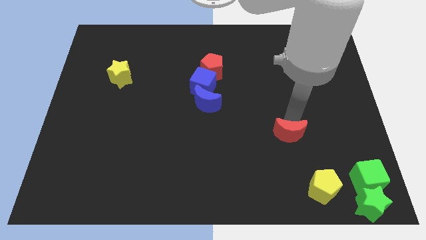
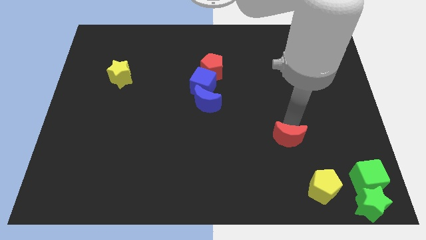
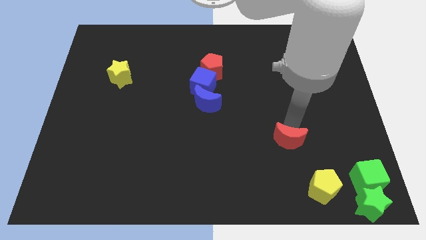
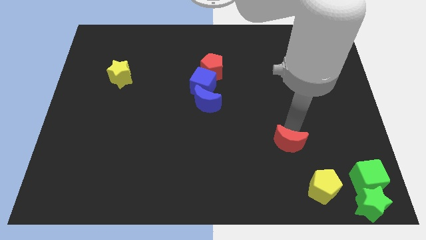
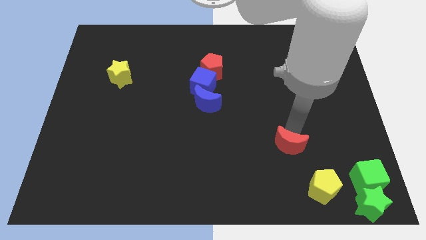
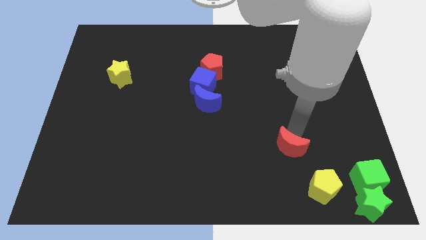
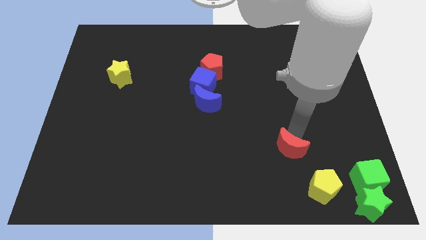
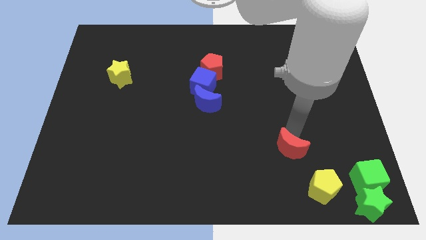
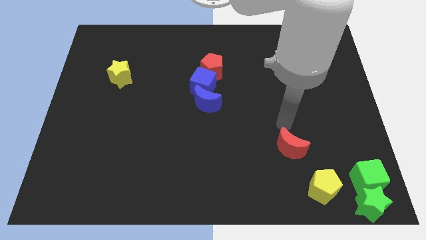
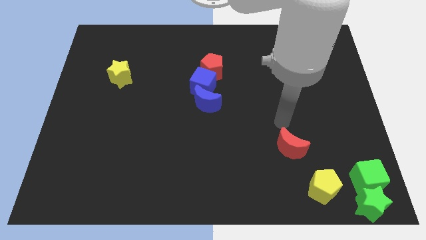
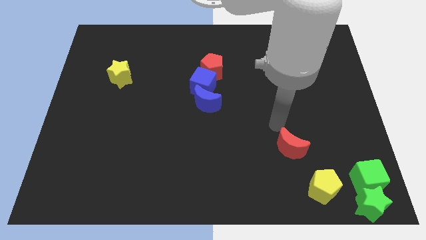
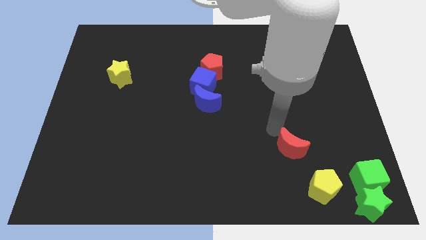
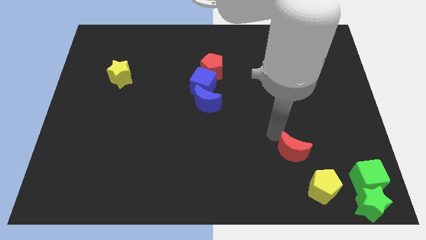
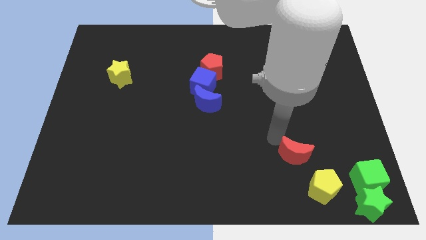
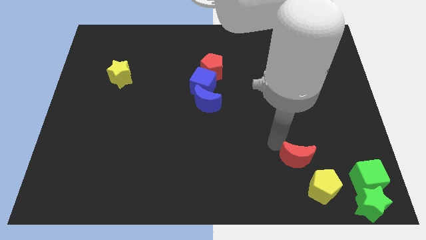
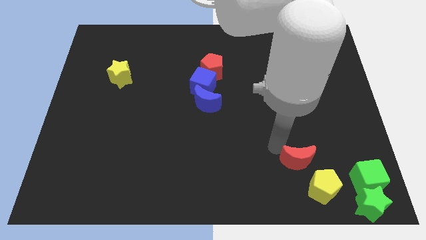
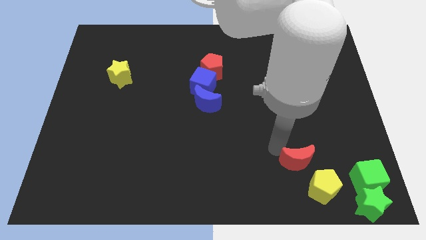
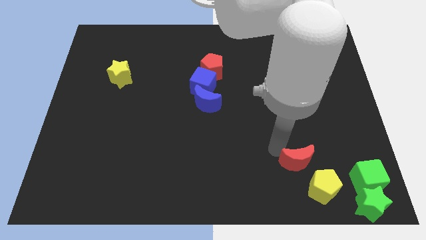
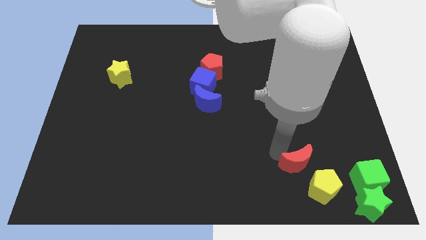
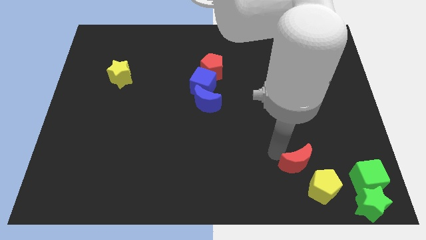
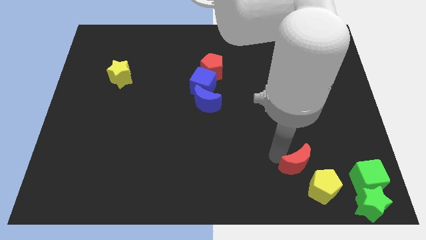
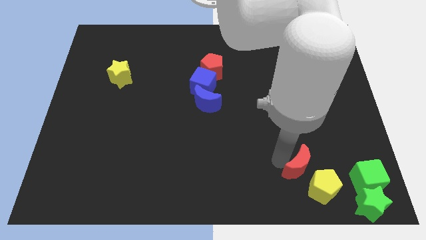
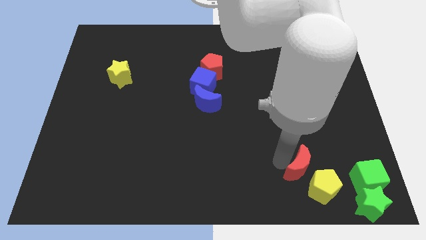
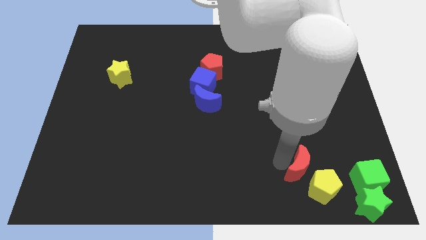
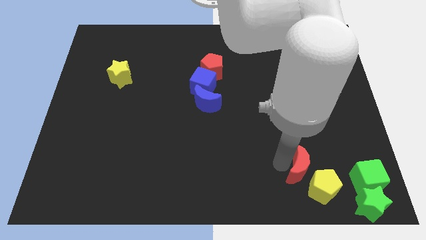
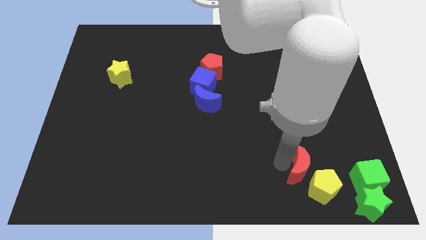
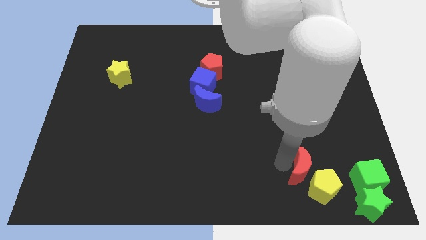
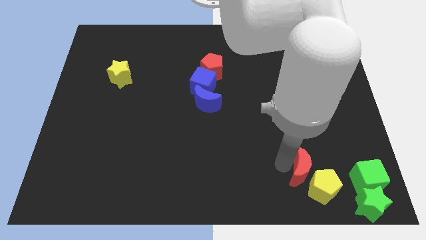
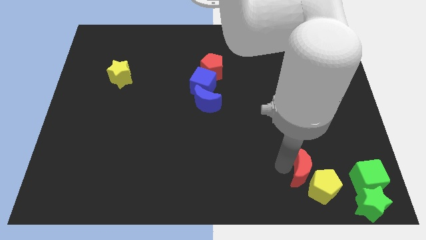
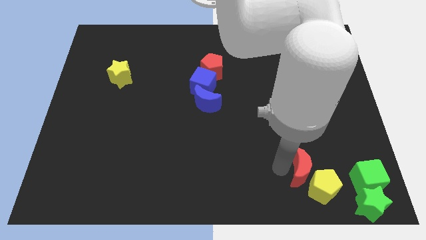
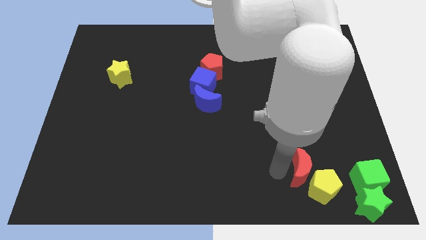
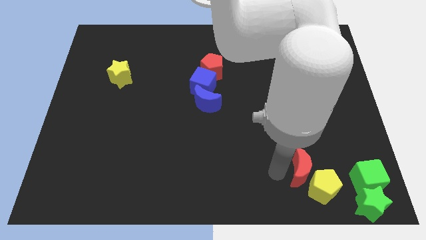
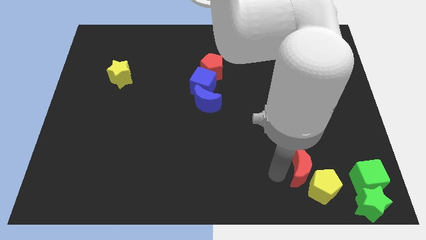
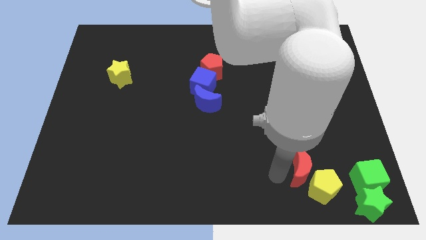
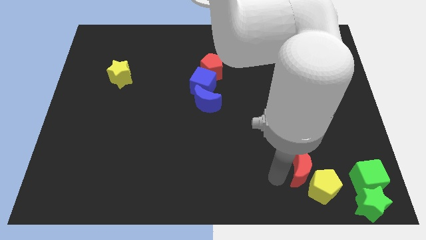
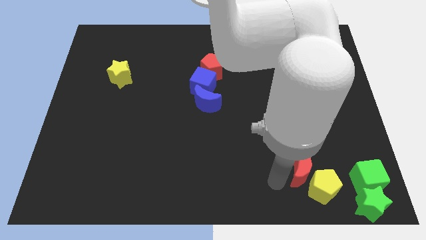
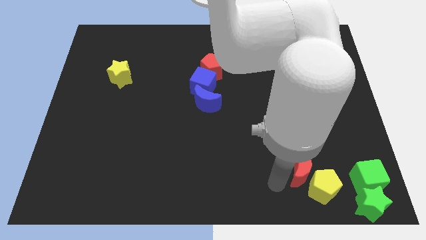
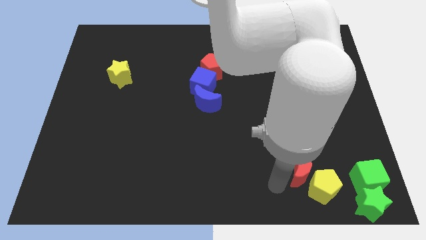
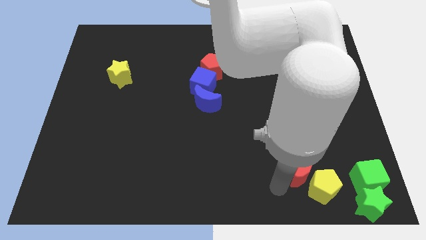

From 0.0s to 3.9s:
push red moon beside yellow pentagon

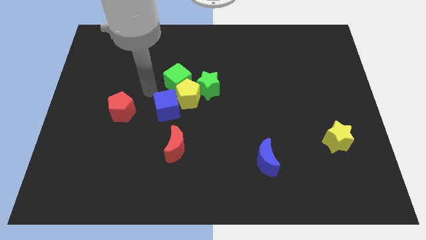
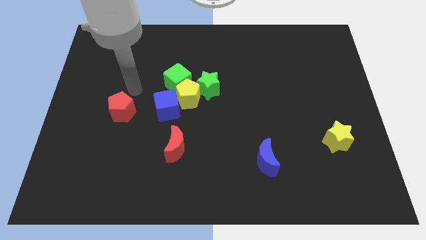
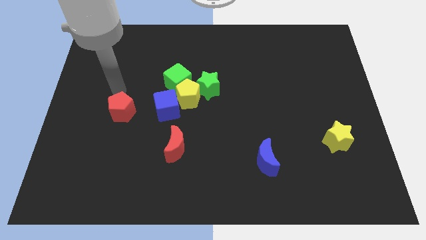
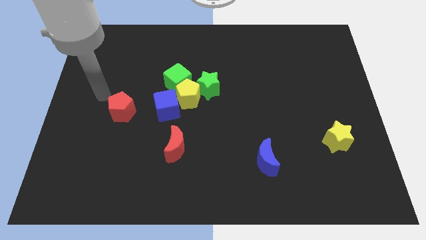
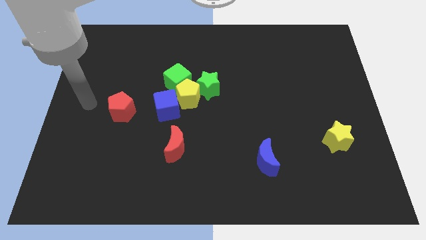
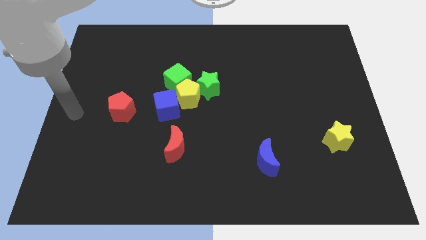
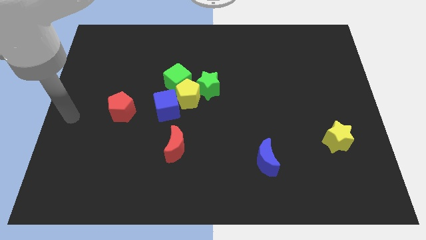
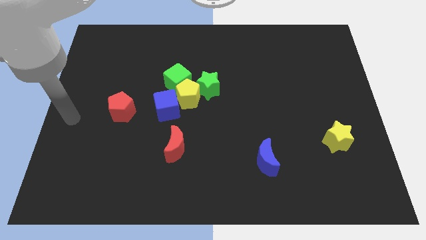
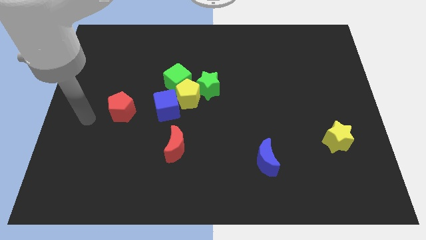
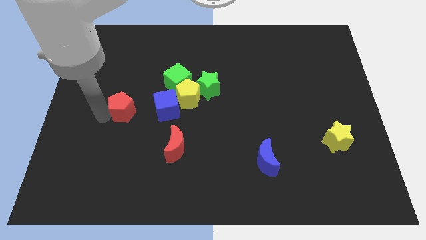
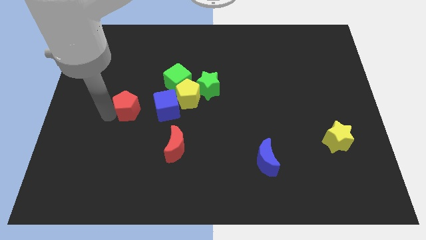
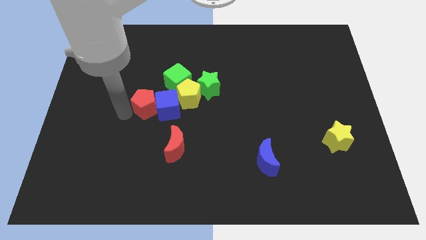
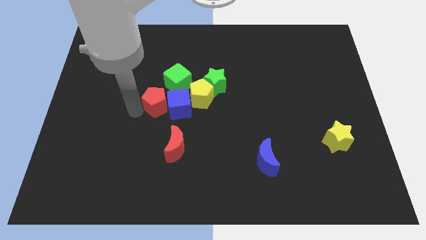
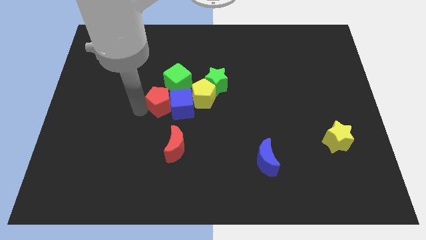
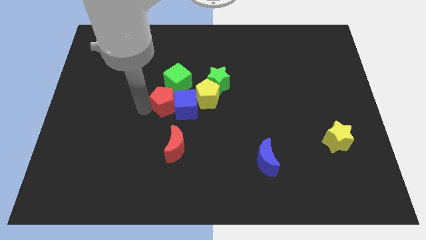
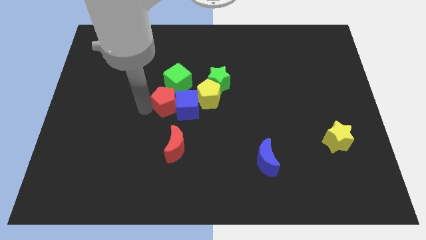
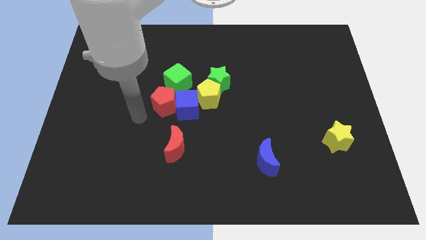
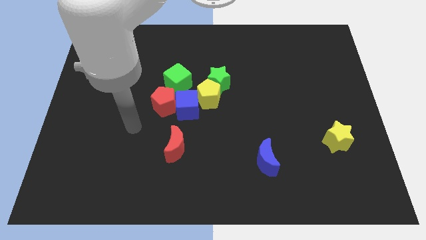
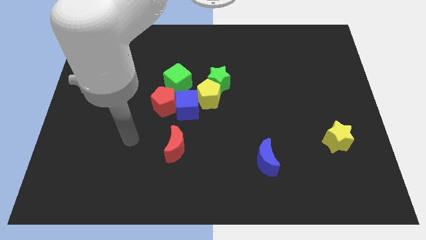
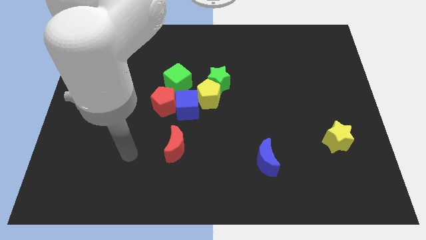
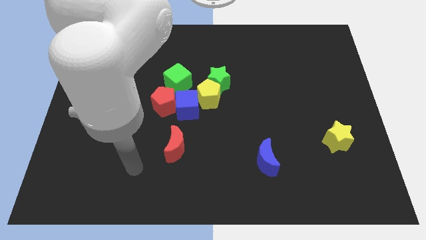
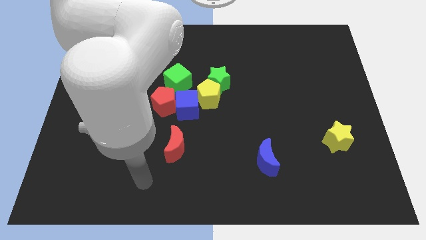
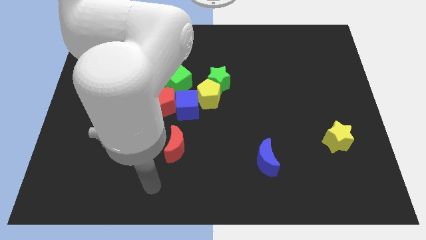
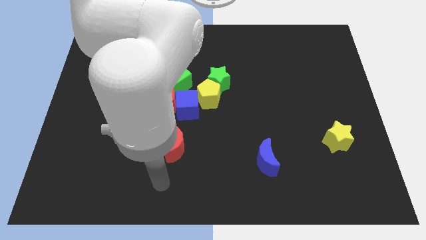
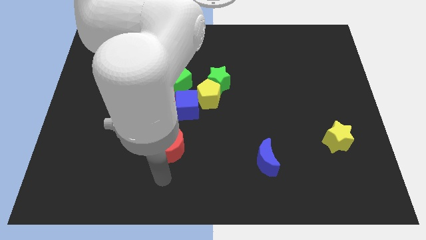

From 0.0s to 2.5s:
move the red pentagon close to the blue cube

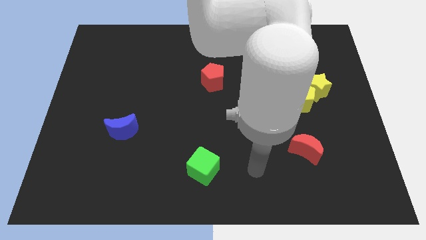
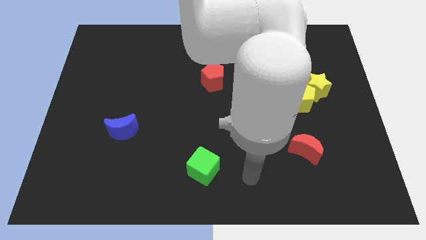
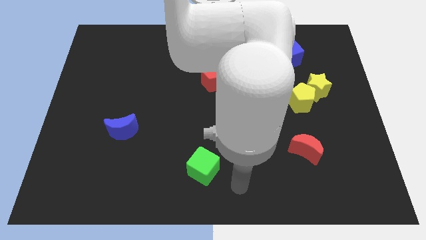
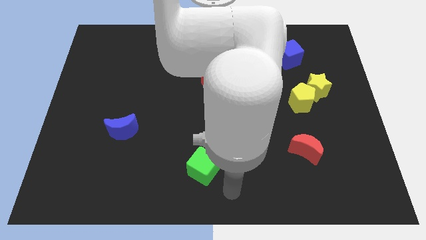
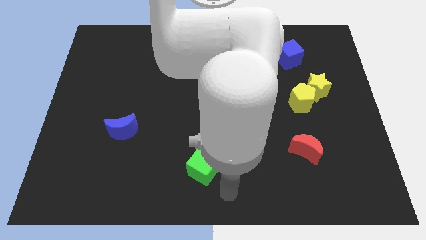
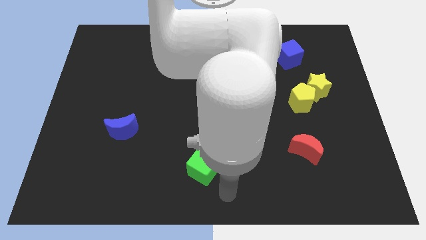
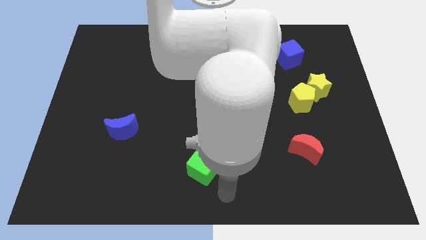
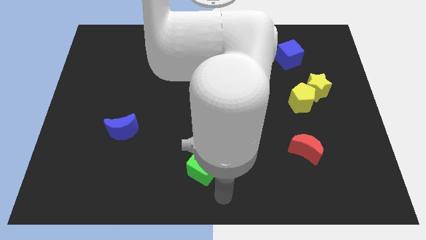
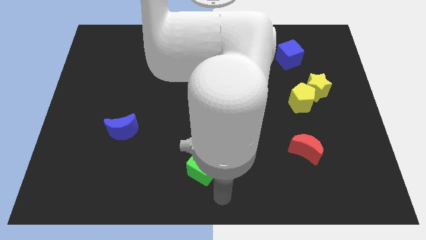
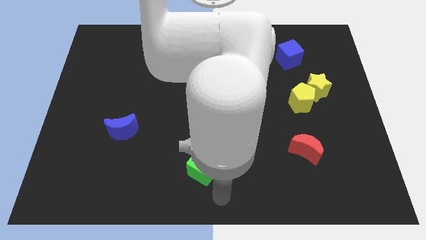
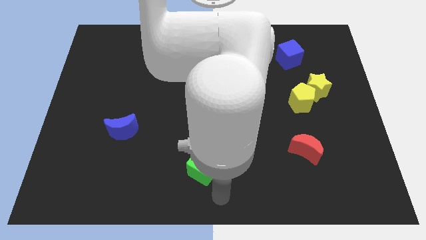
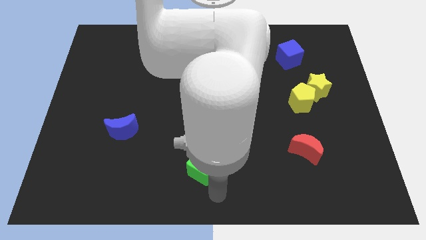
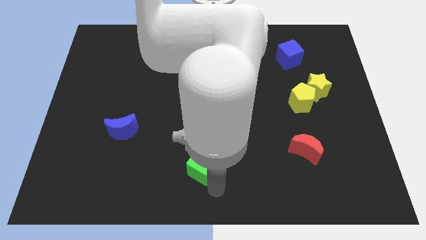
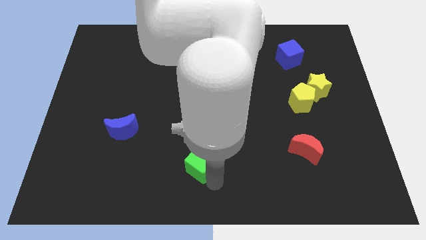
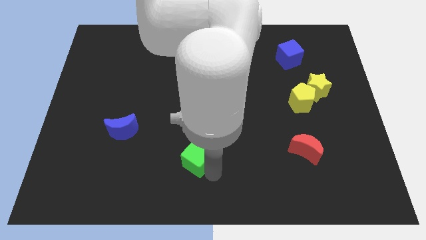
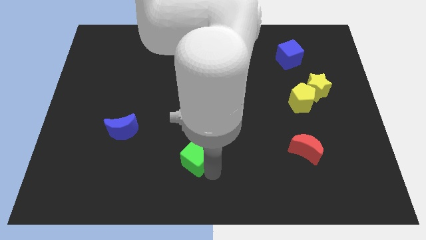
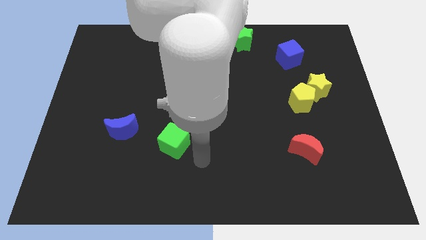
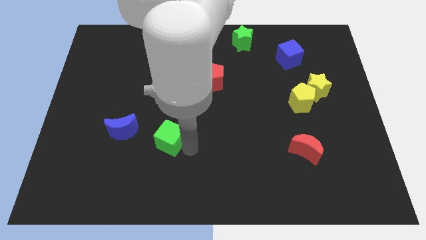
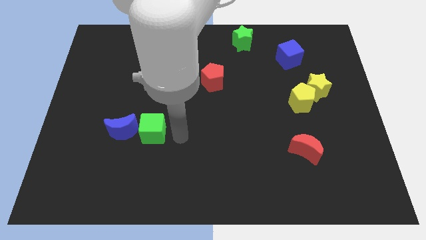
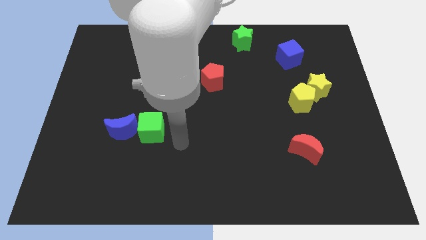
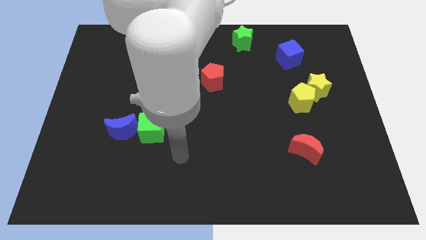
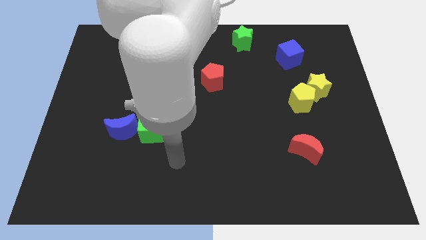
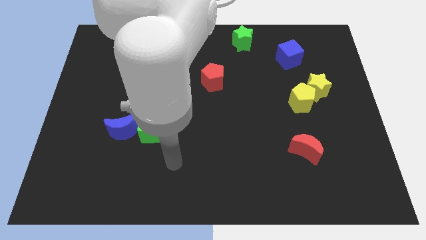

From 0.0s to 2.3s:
place the green cube to the right of the blue moon

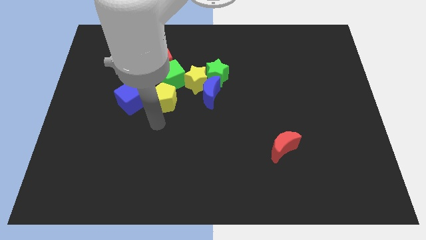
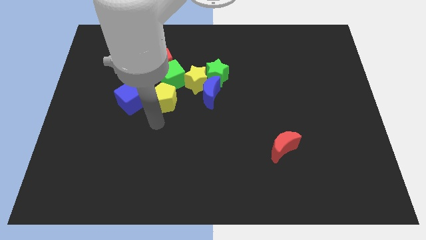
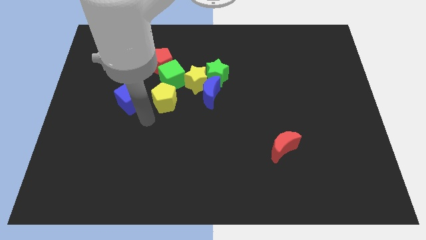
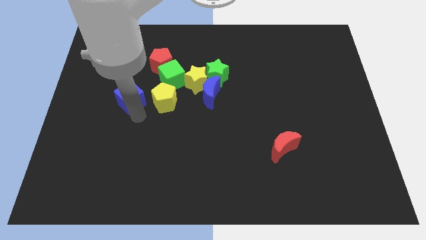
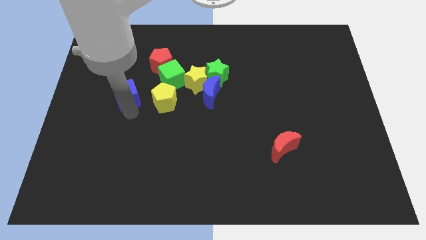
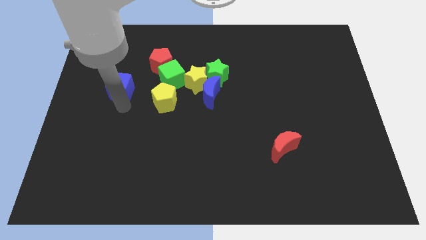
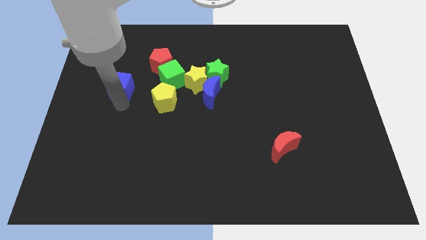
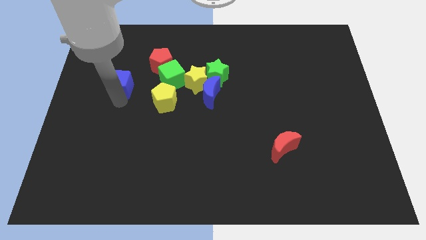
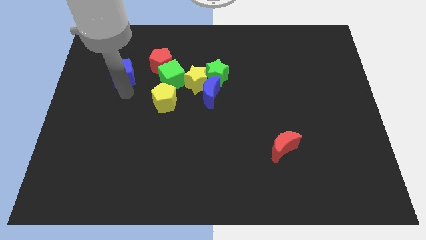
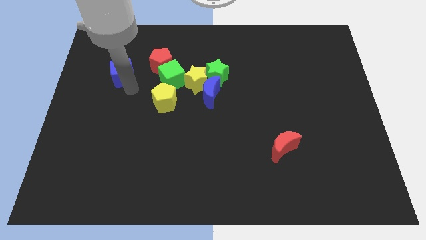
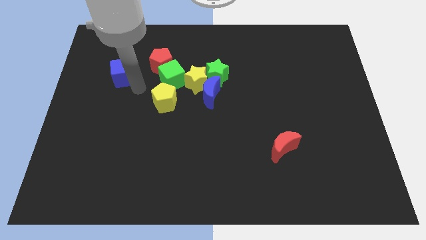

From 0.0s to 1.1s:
push the blue cube diagonally top left to the yellow pentagon
